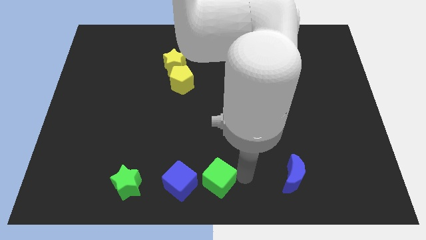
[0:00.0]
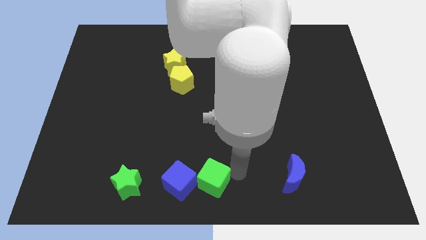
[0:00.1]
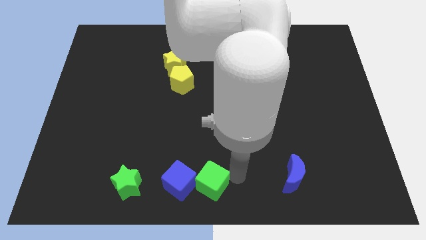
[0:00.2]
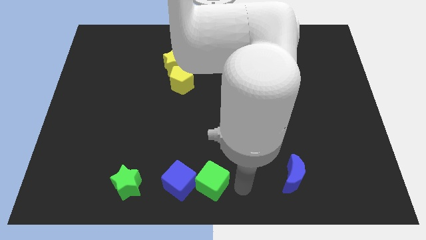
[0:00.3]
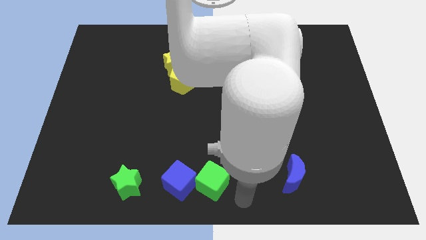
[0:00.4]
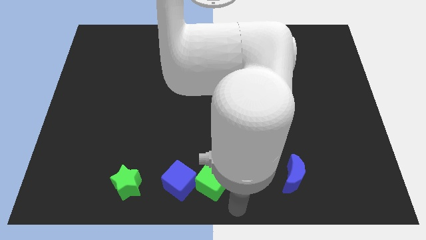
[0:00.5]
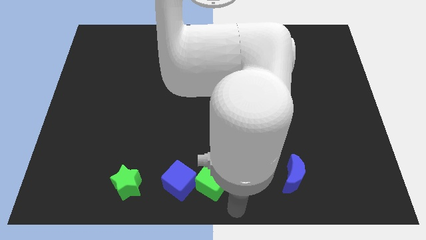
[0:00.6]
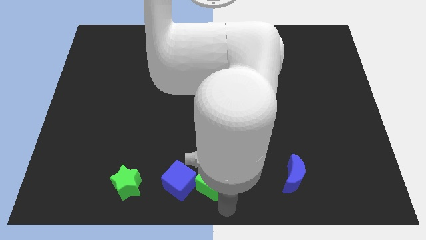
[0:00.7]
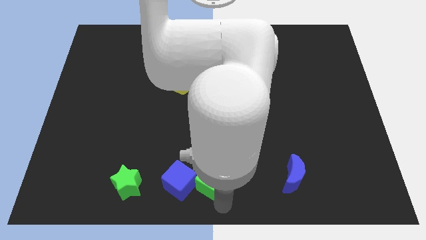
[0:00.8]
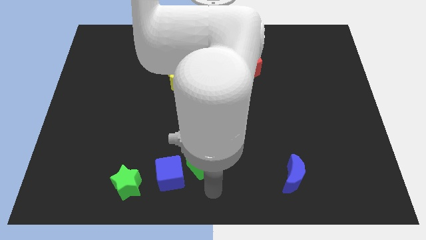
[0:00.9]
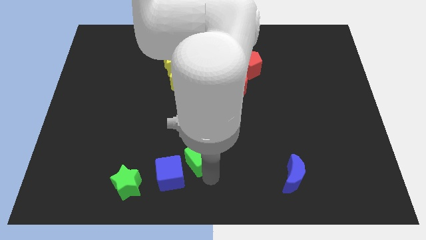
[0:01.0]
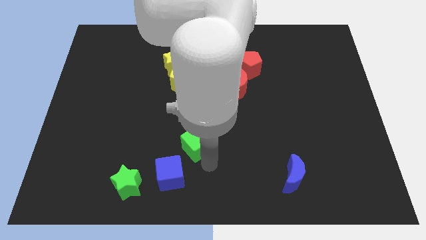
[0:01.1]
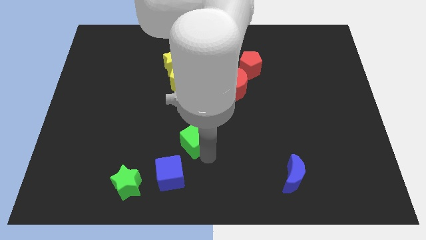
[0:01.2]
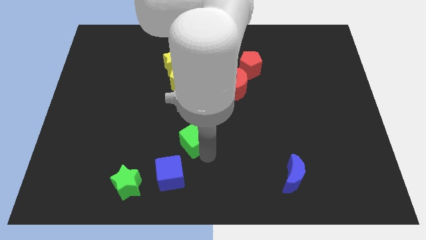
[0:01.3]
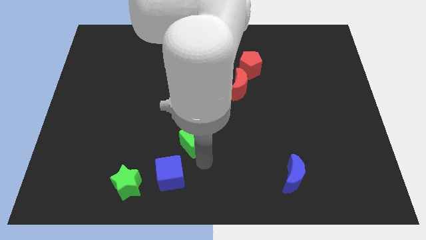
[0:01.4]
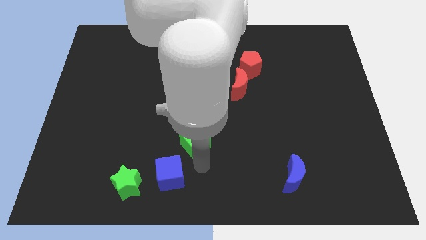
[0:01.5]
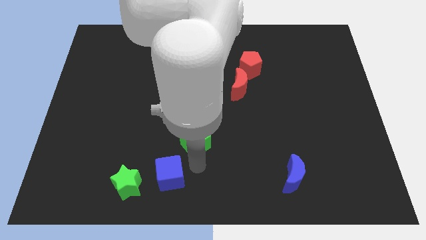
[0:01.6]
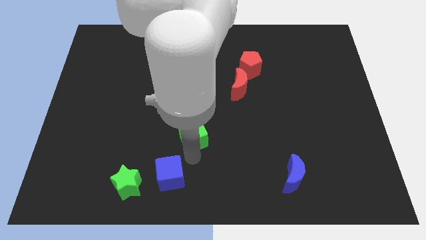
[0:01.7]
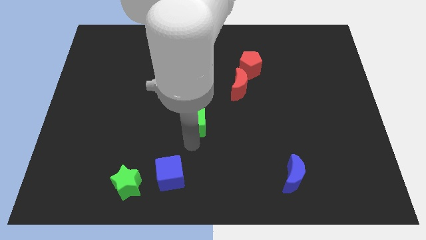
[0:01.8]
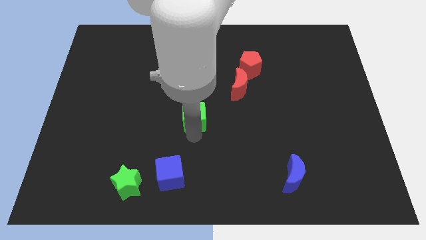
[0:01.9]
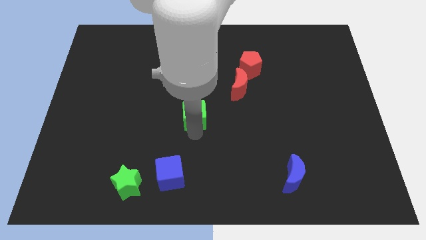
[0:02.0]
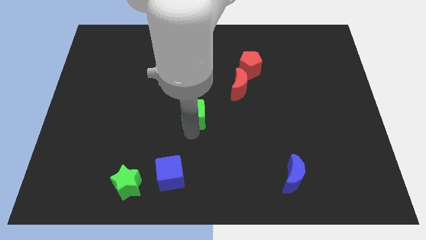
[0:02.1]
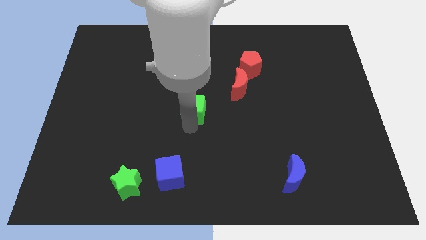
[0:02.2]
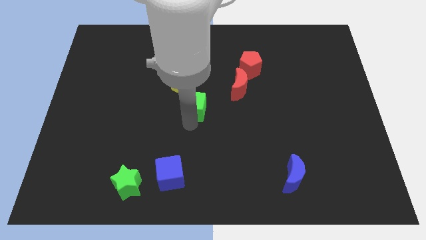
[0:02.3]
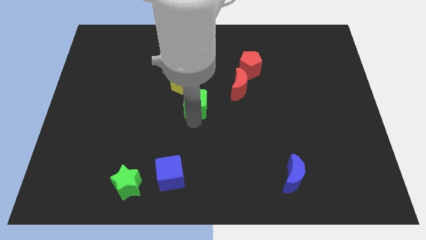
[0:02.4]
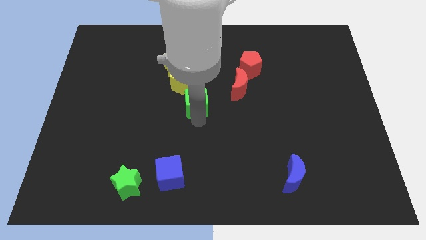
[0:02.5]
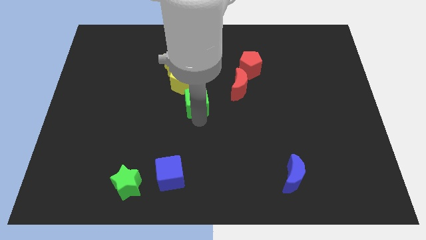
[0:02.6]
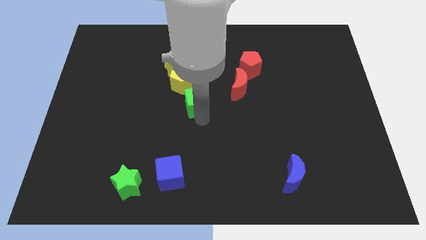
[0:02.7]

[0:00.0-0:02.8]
move the green cube towards the center

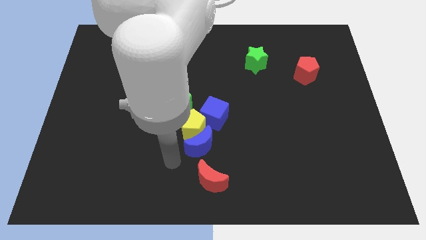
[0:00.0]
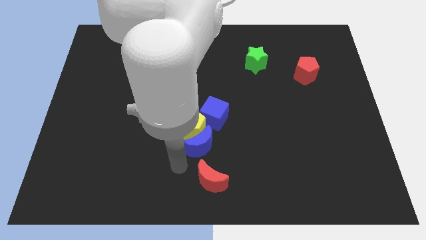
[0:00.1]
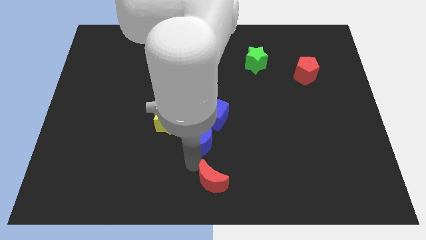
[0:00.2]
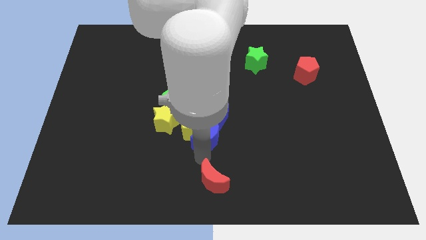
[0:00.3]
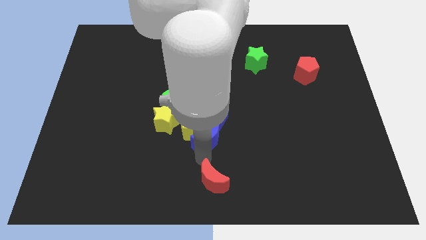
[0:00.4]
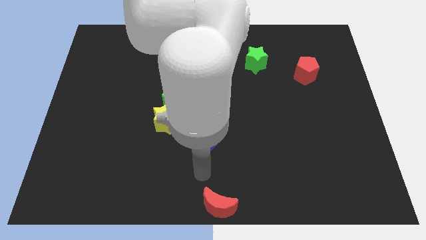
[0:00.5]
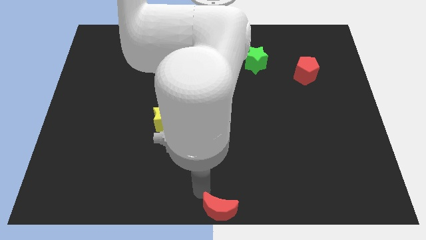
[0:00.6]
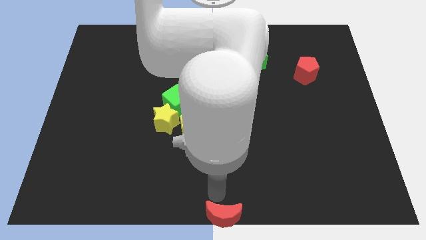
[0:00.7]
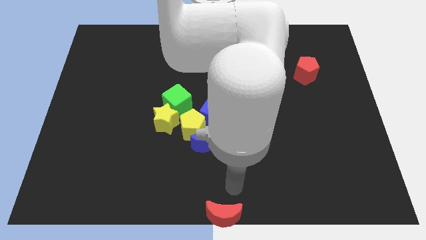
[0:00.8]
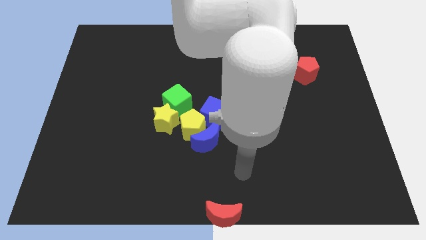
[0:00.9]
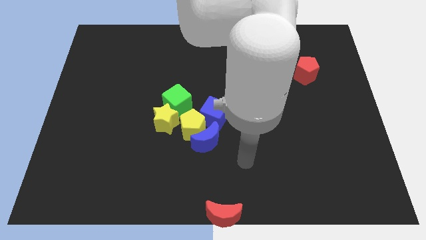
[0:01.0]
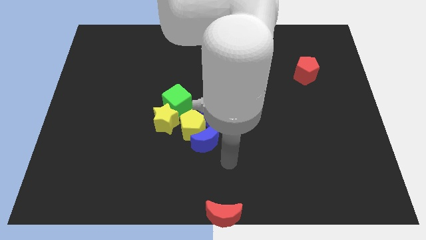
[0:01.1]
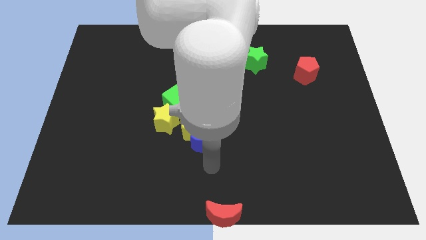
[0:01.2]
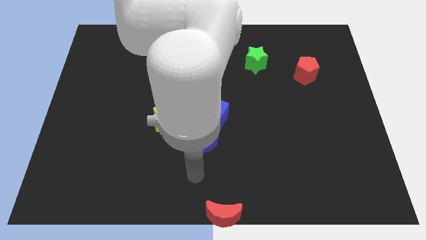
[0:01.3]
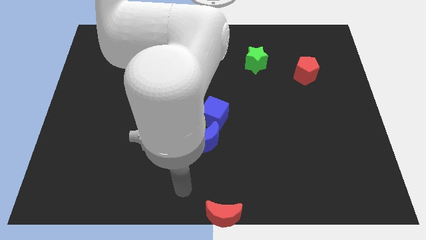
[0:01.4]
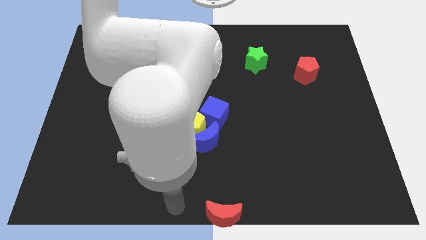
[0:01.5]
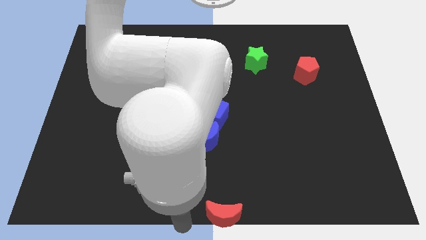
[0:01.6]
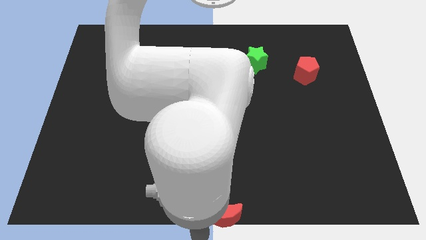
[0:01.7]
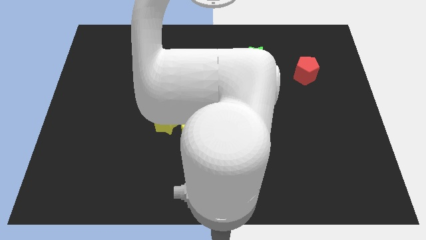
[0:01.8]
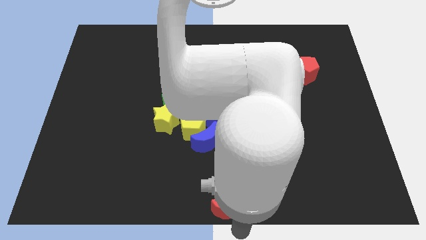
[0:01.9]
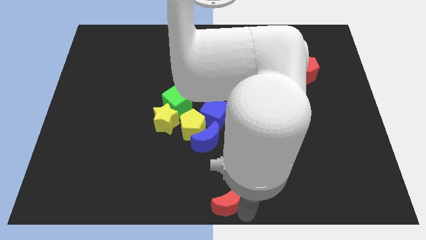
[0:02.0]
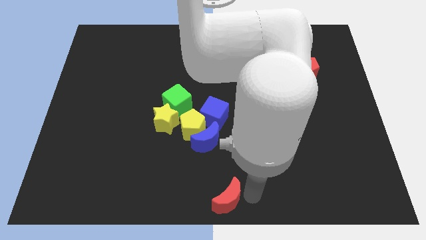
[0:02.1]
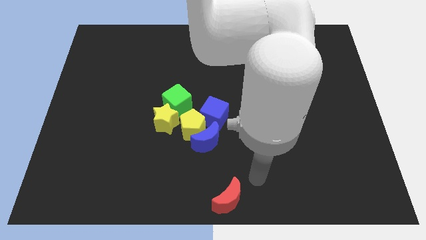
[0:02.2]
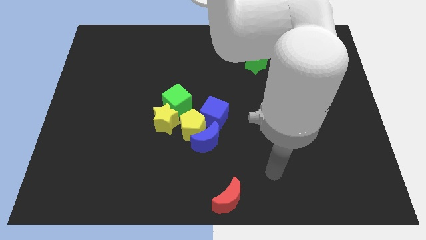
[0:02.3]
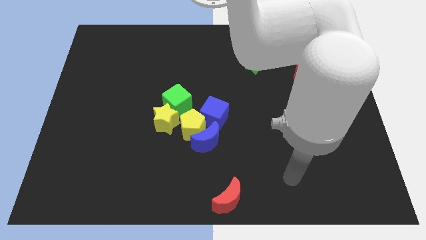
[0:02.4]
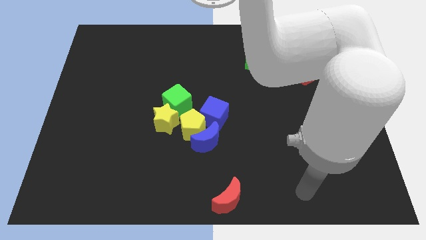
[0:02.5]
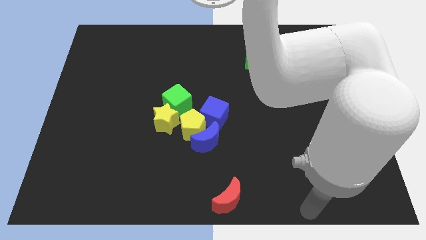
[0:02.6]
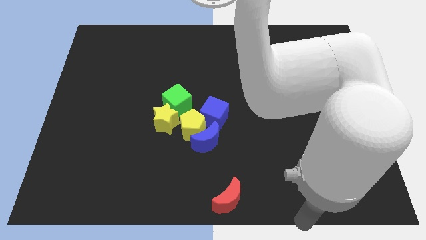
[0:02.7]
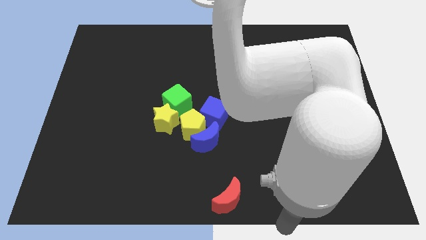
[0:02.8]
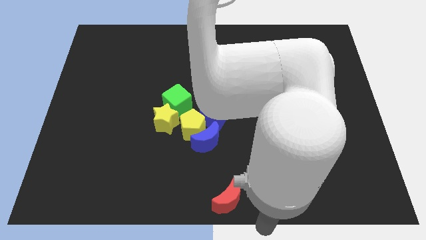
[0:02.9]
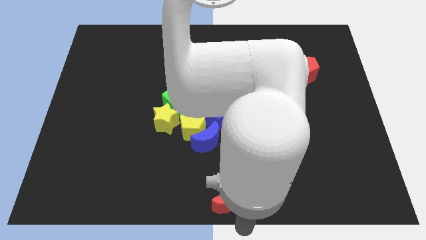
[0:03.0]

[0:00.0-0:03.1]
move the red moon to the bottom center of the board

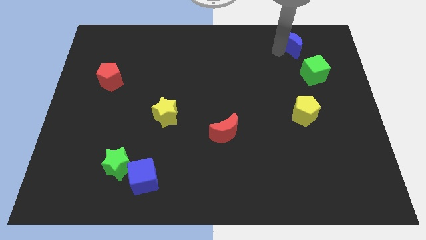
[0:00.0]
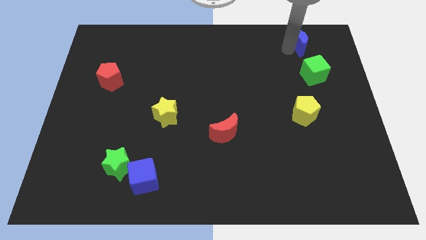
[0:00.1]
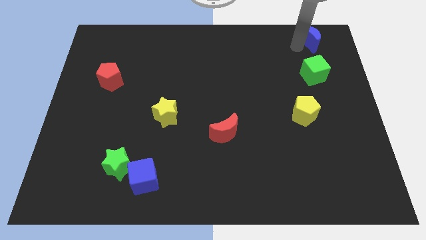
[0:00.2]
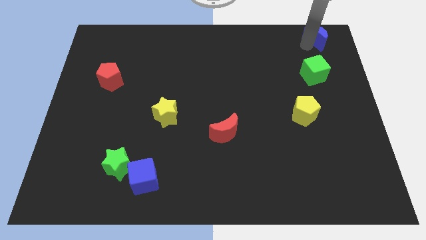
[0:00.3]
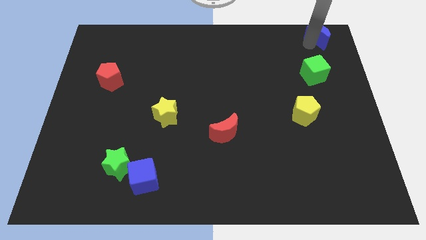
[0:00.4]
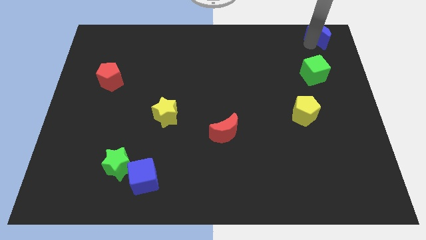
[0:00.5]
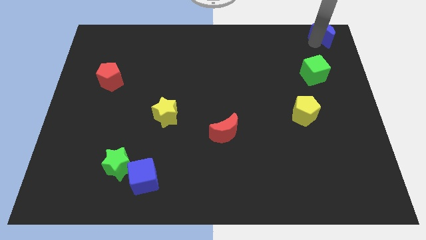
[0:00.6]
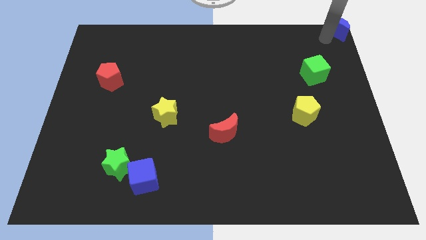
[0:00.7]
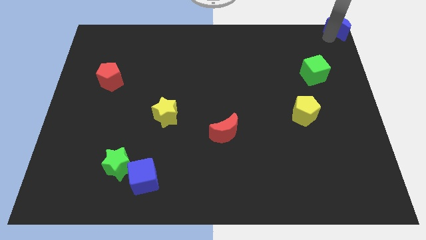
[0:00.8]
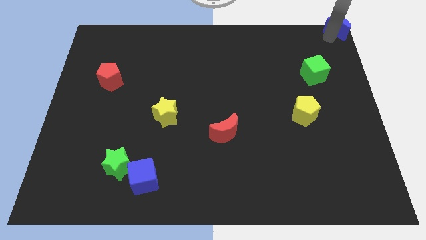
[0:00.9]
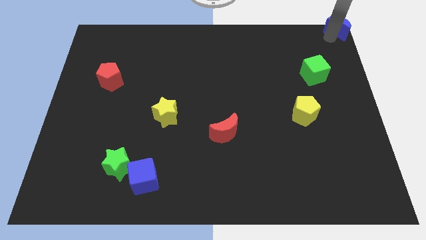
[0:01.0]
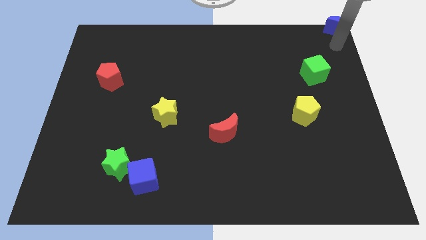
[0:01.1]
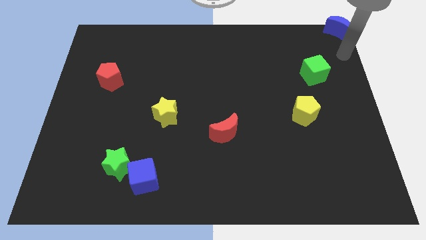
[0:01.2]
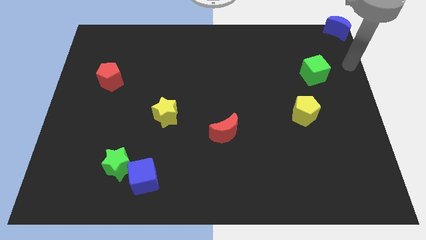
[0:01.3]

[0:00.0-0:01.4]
place the blue moon at the top right corner of the board

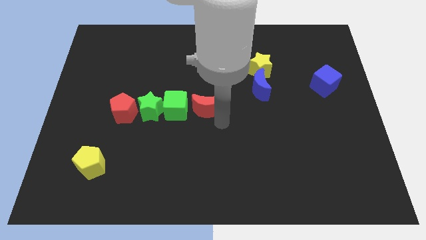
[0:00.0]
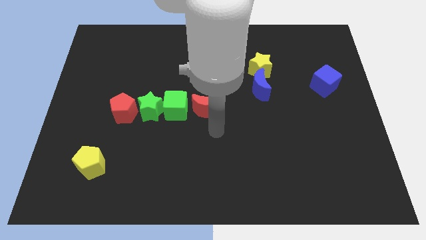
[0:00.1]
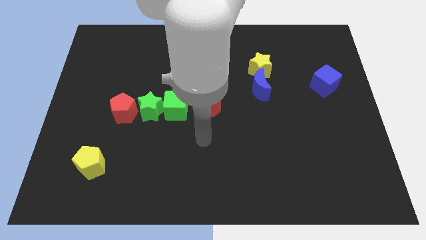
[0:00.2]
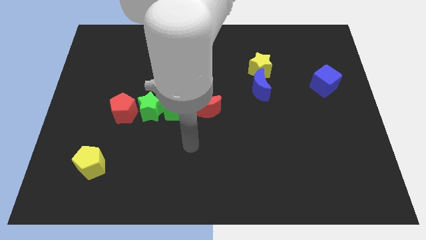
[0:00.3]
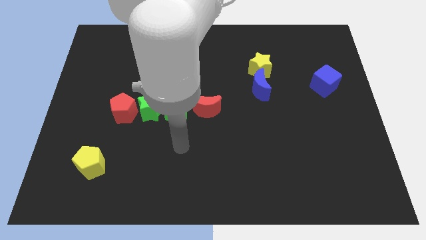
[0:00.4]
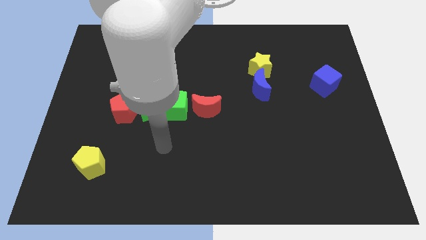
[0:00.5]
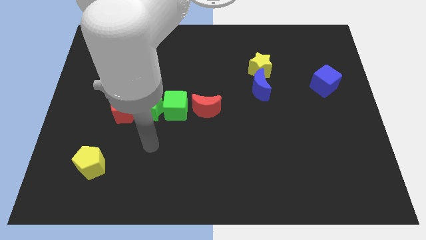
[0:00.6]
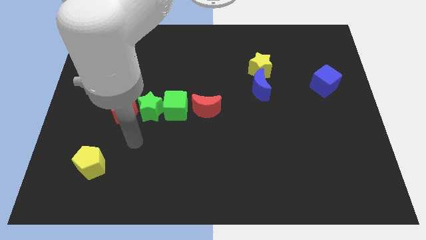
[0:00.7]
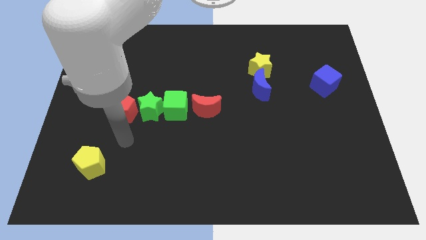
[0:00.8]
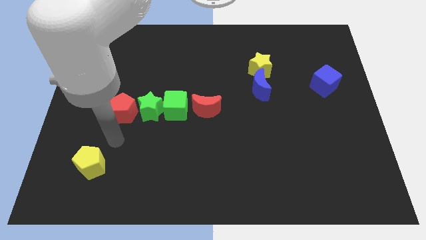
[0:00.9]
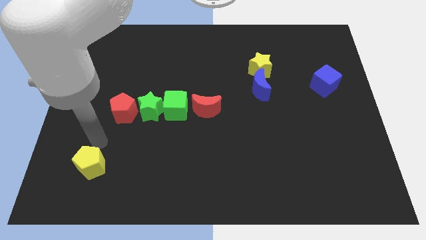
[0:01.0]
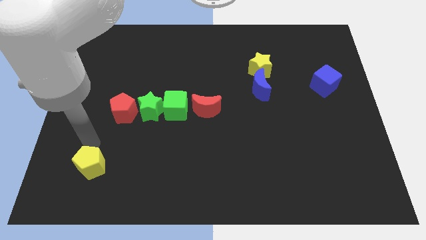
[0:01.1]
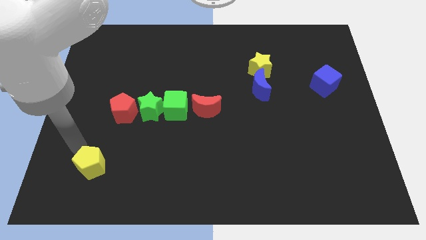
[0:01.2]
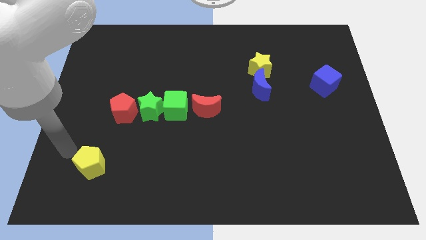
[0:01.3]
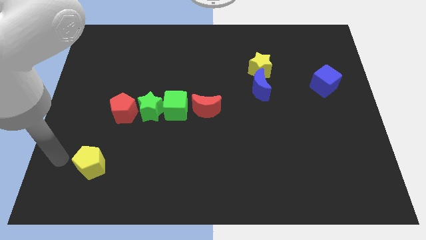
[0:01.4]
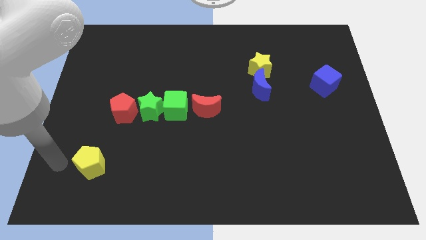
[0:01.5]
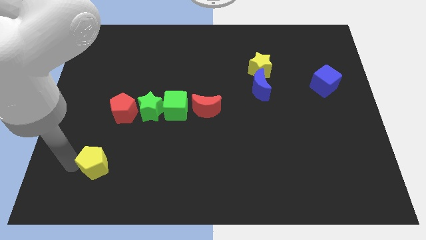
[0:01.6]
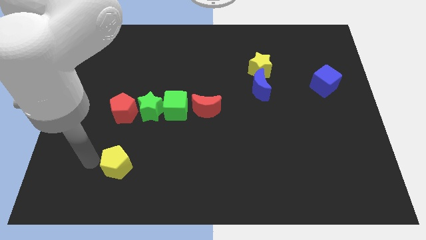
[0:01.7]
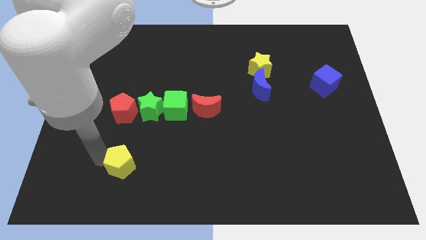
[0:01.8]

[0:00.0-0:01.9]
move your arm into the yellow pentagon
